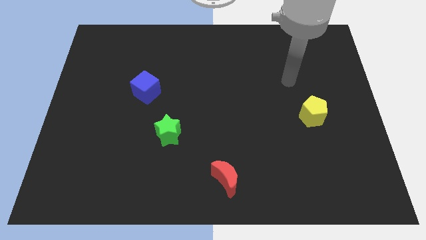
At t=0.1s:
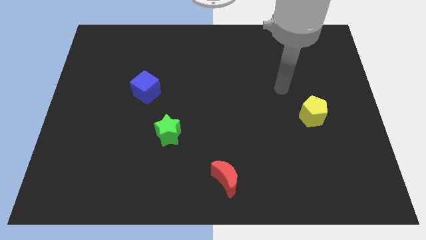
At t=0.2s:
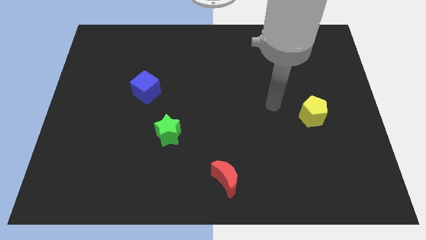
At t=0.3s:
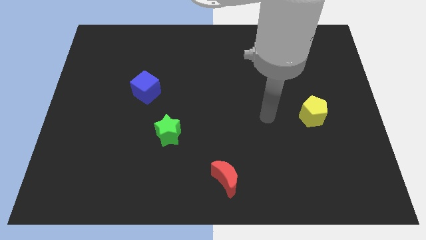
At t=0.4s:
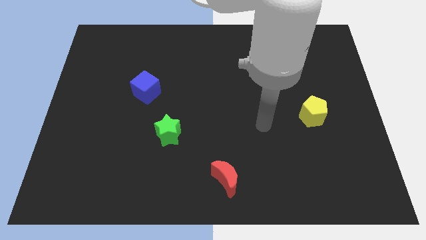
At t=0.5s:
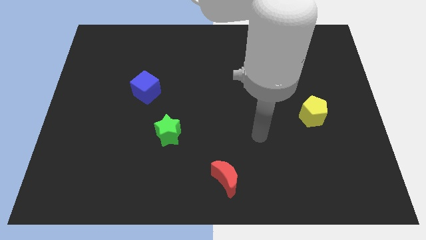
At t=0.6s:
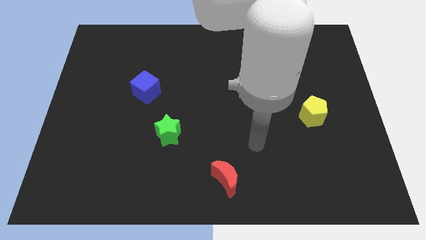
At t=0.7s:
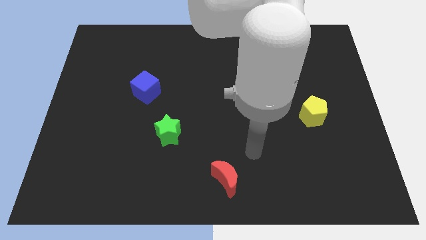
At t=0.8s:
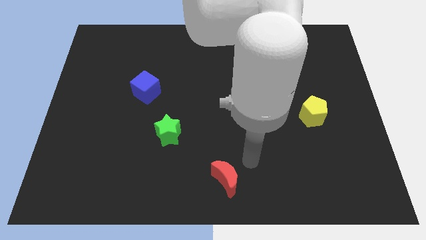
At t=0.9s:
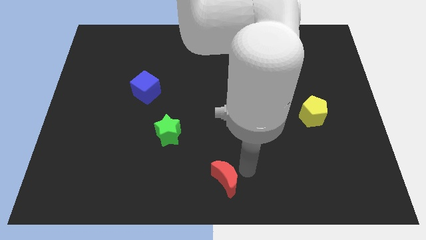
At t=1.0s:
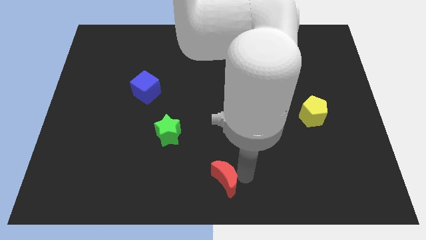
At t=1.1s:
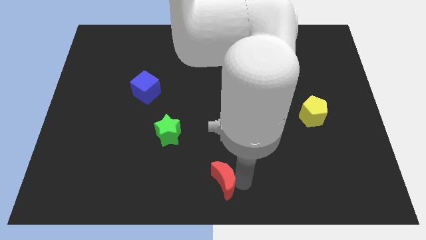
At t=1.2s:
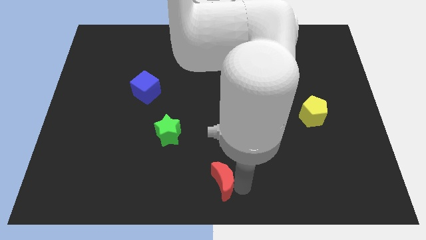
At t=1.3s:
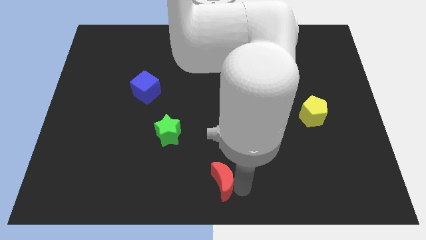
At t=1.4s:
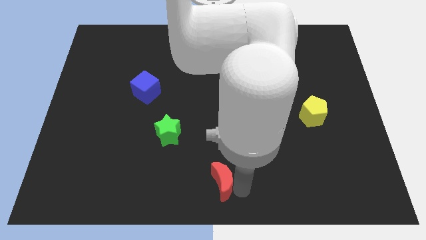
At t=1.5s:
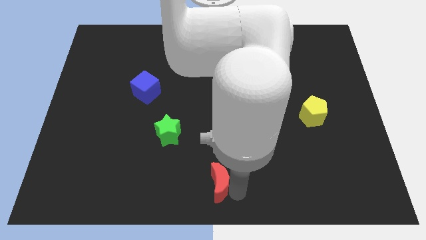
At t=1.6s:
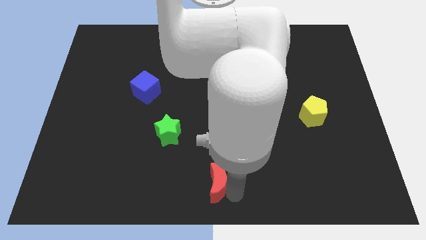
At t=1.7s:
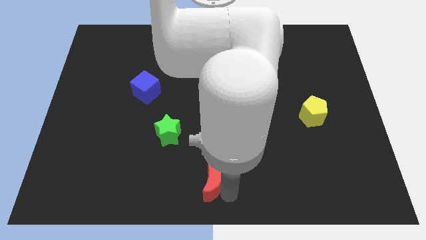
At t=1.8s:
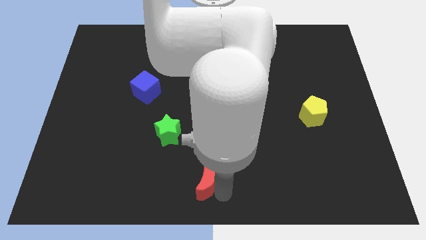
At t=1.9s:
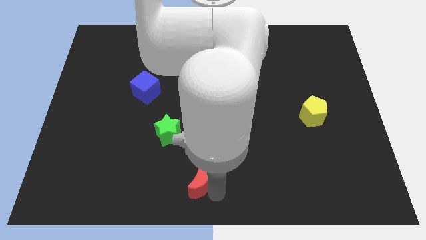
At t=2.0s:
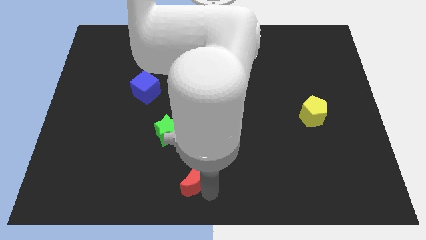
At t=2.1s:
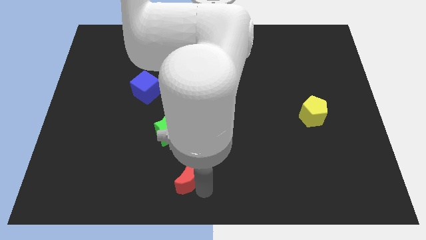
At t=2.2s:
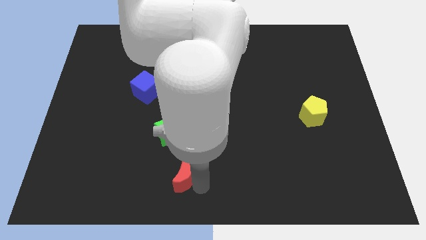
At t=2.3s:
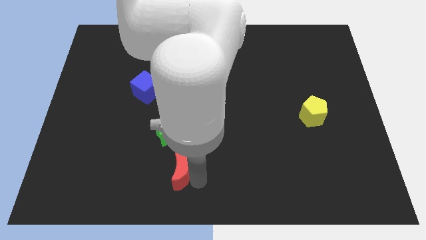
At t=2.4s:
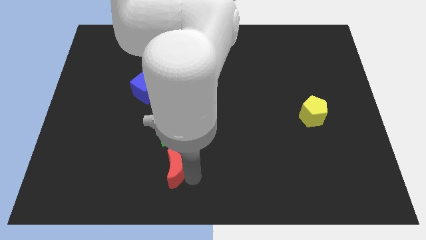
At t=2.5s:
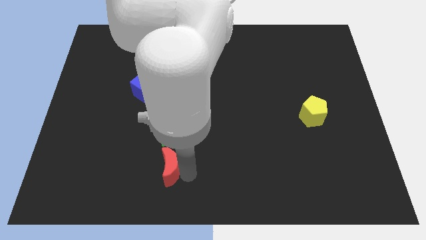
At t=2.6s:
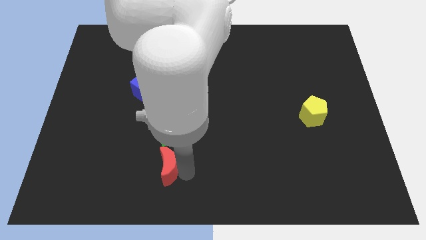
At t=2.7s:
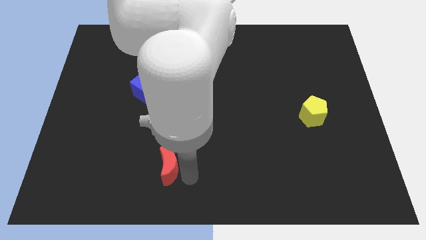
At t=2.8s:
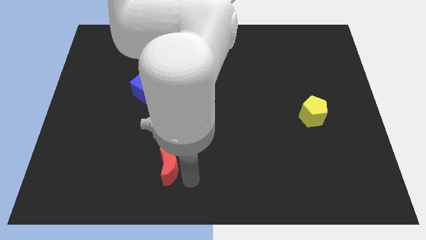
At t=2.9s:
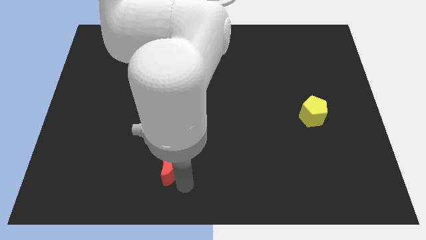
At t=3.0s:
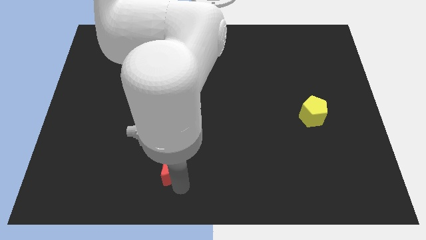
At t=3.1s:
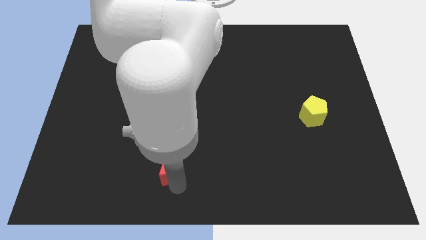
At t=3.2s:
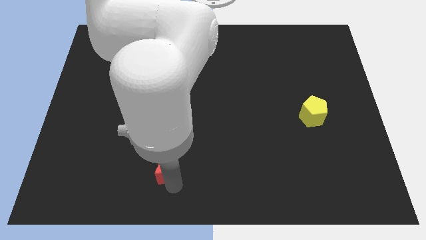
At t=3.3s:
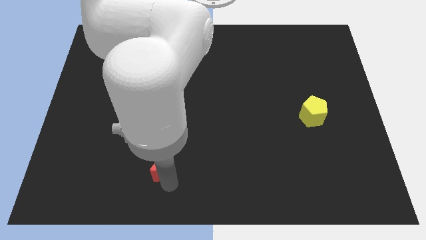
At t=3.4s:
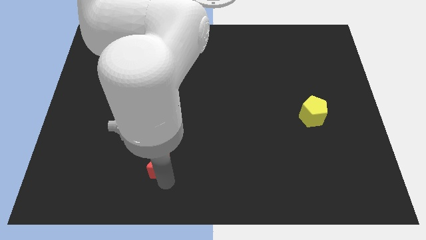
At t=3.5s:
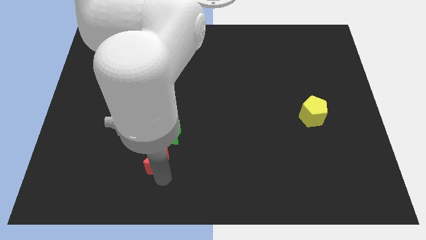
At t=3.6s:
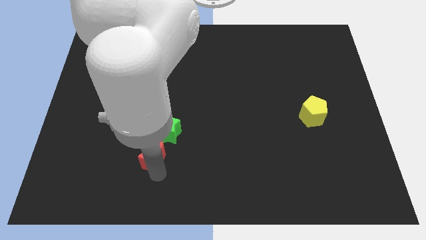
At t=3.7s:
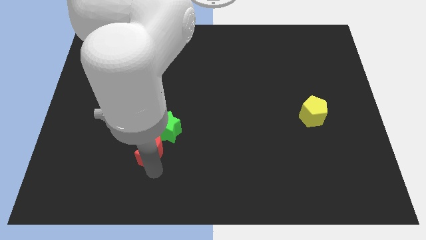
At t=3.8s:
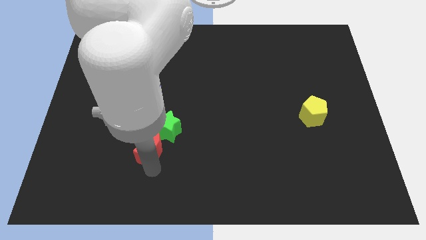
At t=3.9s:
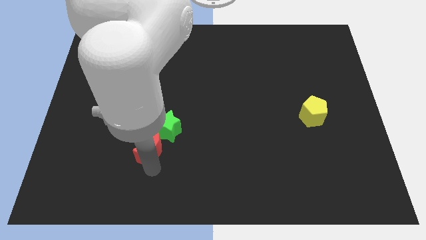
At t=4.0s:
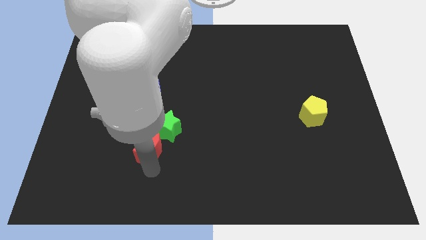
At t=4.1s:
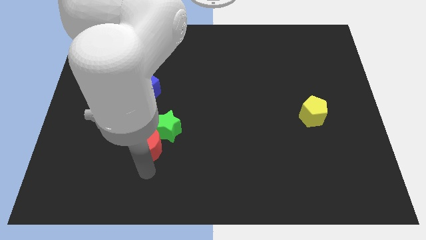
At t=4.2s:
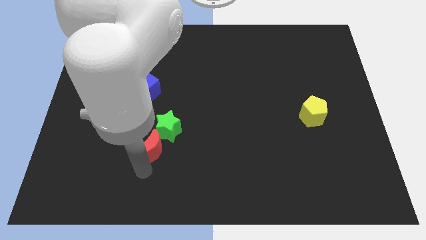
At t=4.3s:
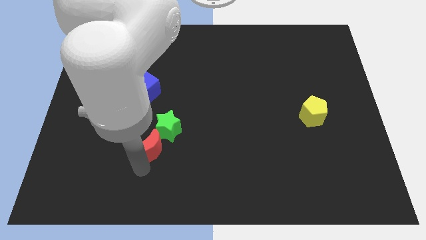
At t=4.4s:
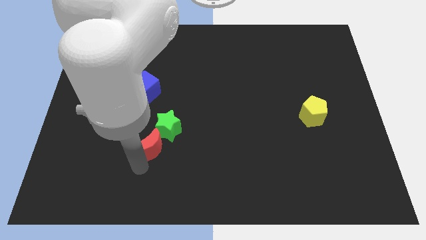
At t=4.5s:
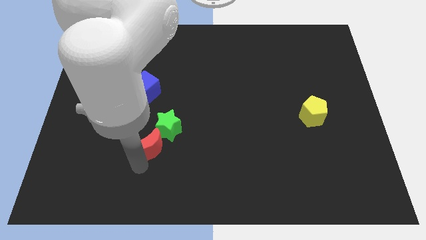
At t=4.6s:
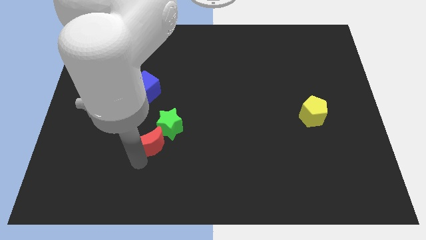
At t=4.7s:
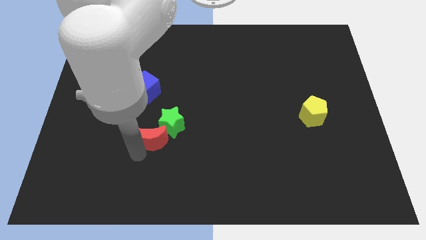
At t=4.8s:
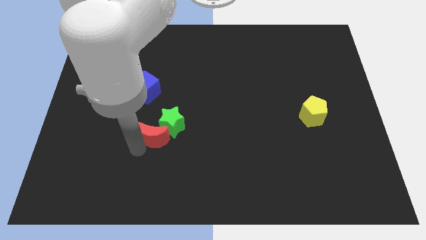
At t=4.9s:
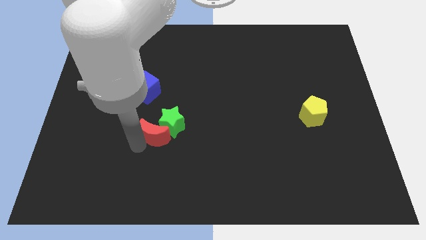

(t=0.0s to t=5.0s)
push the moon towards the green star

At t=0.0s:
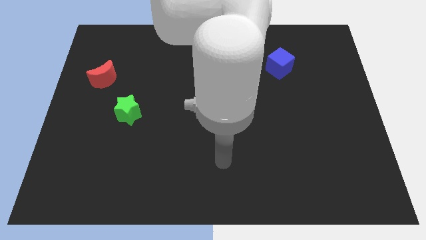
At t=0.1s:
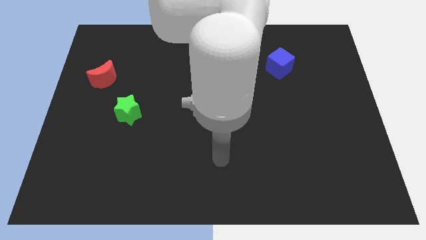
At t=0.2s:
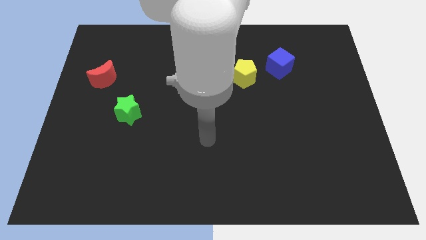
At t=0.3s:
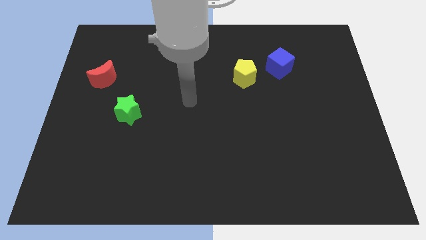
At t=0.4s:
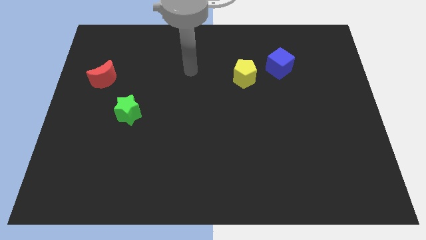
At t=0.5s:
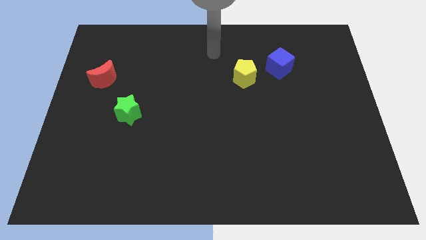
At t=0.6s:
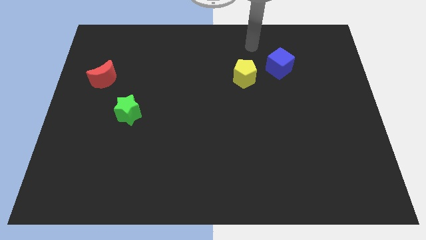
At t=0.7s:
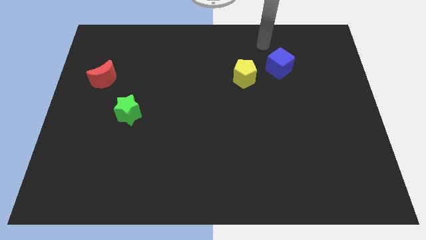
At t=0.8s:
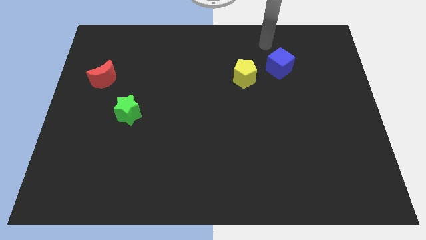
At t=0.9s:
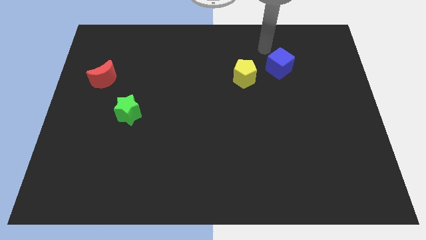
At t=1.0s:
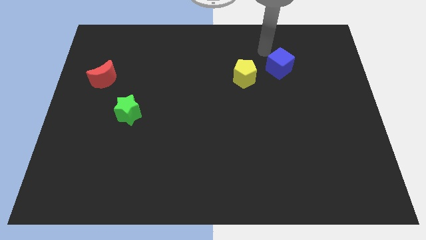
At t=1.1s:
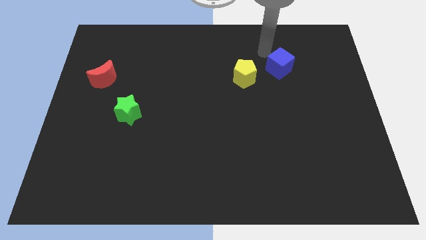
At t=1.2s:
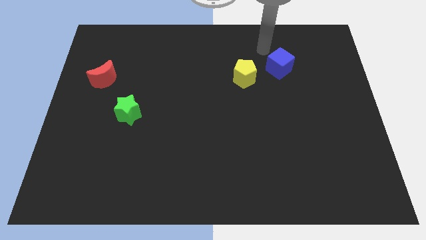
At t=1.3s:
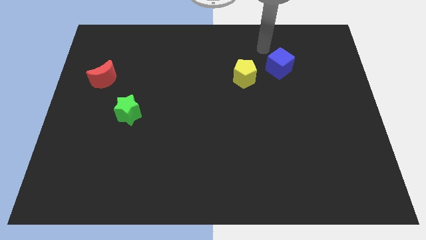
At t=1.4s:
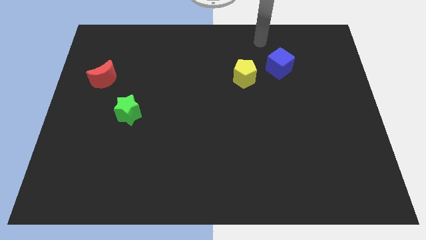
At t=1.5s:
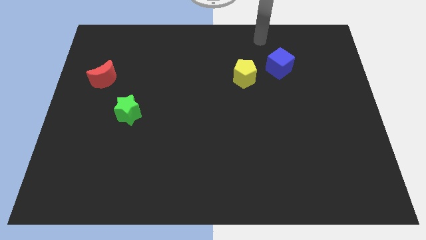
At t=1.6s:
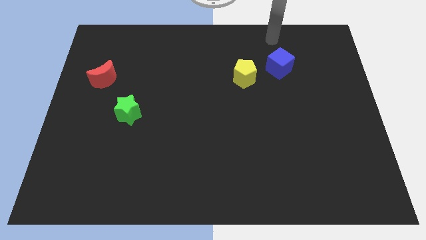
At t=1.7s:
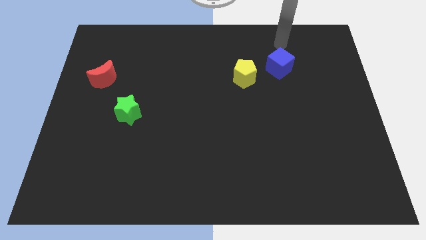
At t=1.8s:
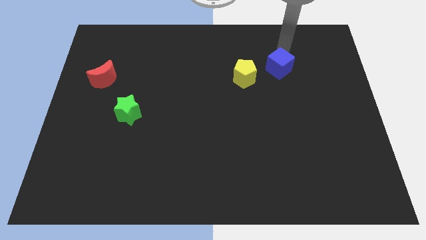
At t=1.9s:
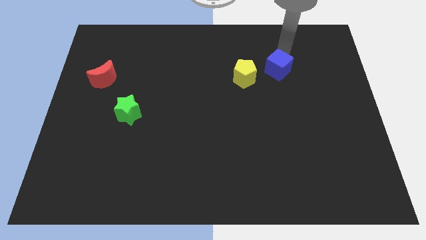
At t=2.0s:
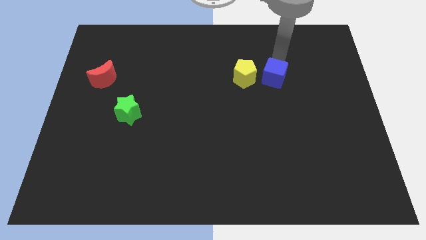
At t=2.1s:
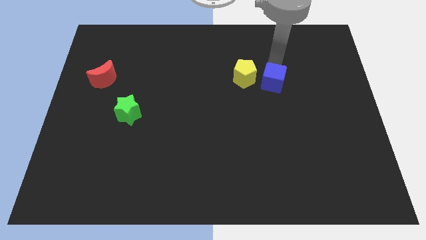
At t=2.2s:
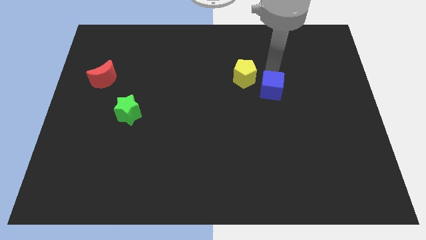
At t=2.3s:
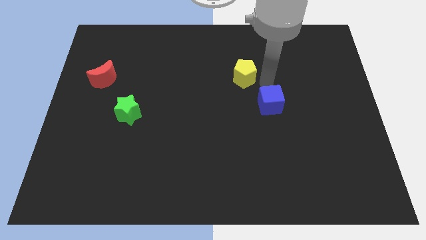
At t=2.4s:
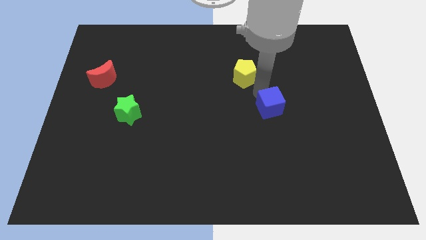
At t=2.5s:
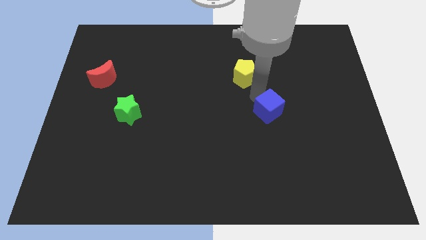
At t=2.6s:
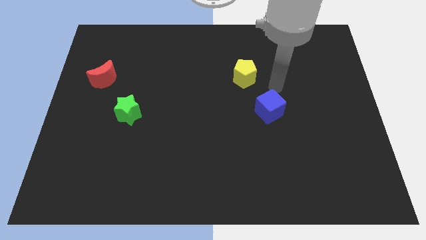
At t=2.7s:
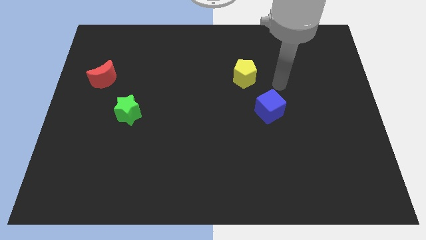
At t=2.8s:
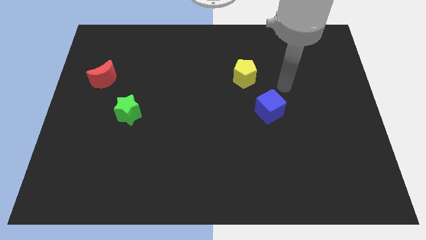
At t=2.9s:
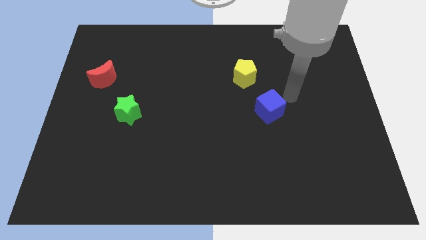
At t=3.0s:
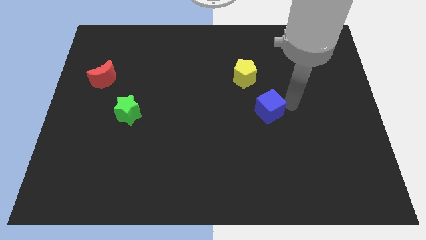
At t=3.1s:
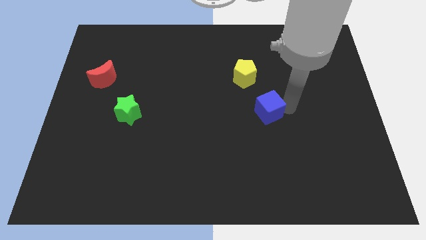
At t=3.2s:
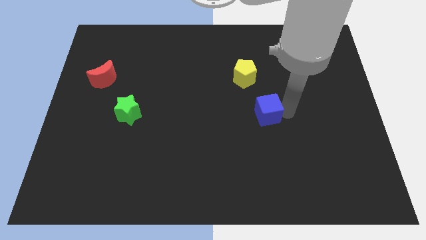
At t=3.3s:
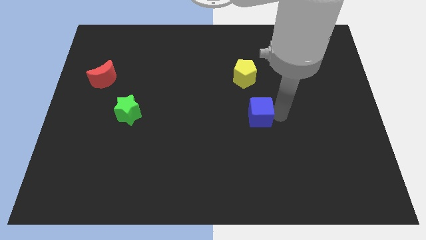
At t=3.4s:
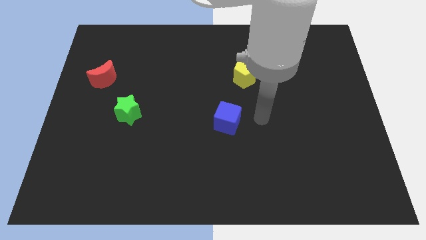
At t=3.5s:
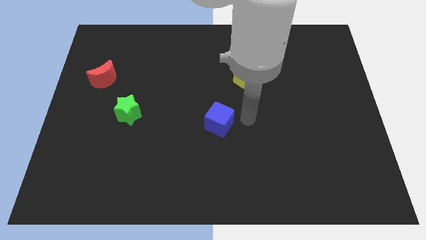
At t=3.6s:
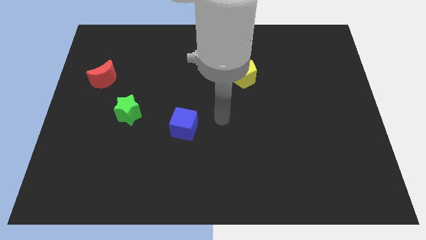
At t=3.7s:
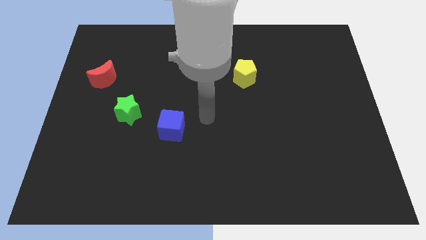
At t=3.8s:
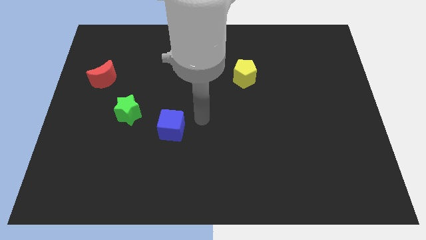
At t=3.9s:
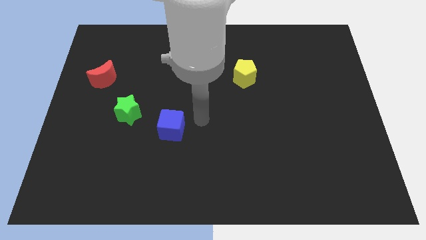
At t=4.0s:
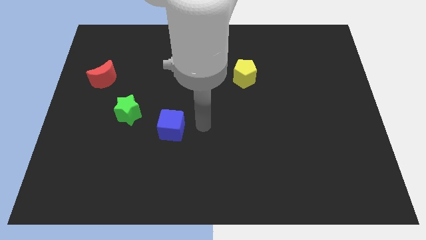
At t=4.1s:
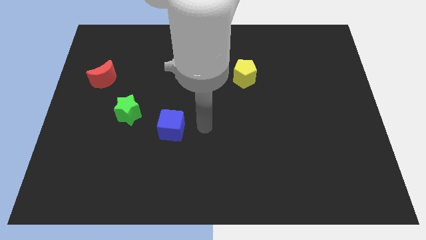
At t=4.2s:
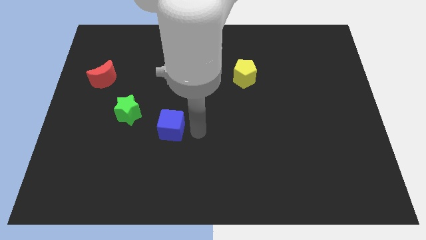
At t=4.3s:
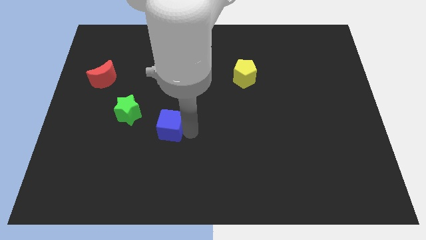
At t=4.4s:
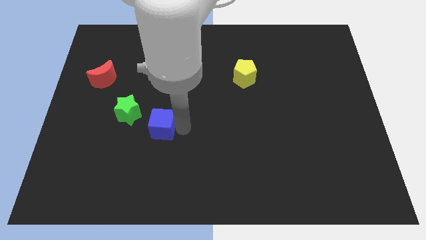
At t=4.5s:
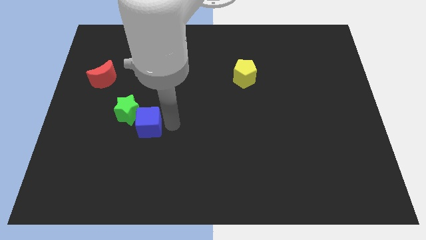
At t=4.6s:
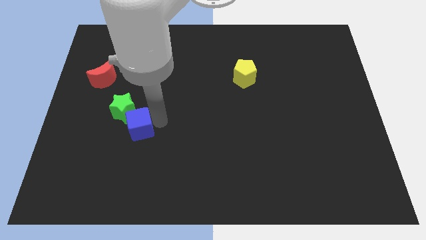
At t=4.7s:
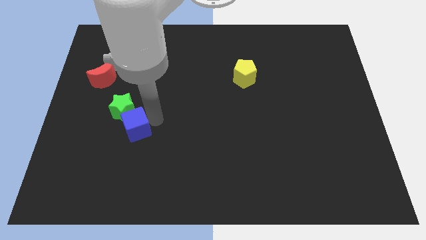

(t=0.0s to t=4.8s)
slide the blue block close to the star
